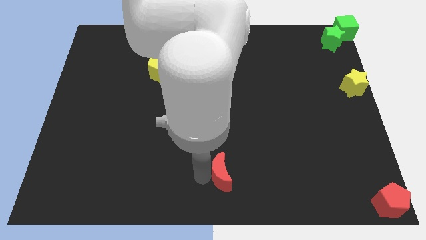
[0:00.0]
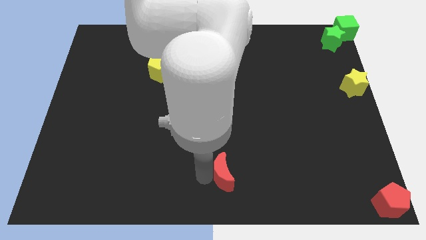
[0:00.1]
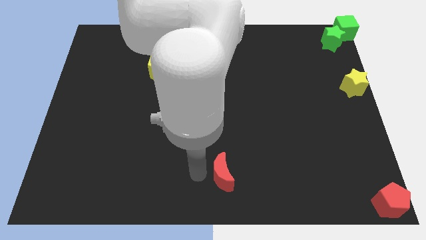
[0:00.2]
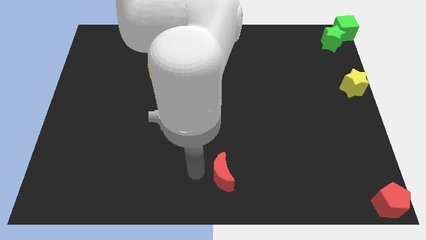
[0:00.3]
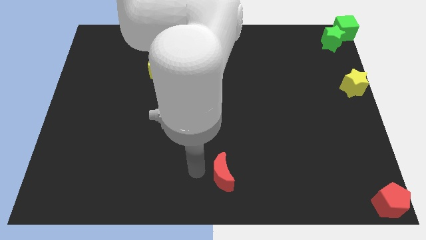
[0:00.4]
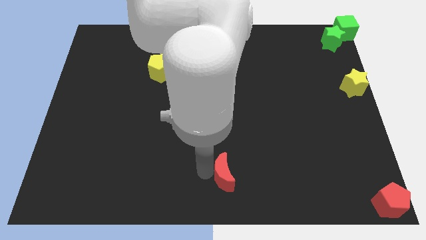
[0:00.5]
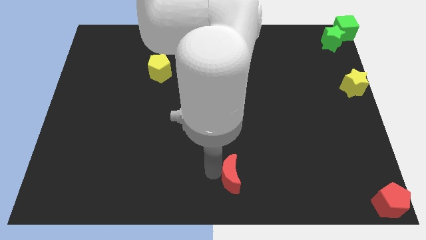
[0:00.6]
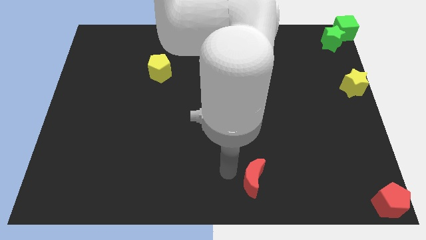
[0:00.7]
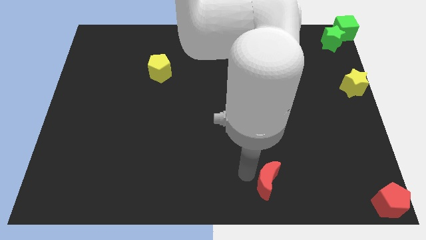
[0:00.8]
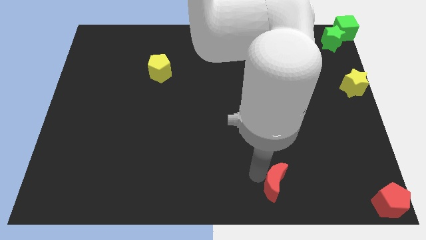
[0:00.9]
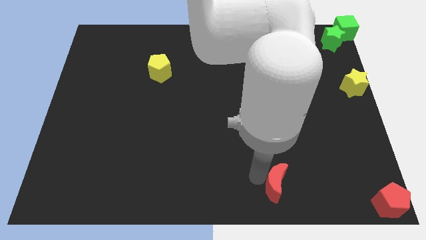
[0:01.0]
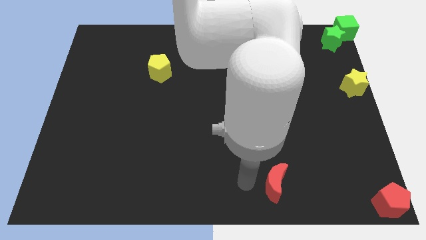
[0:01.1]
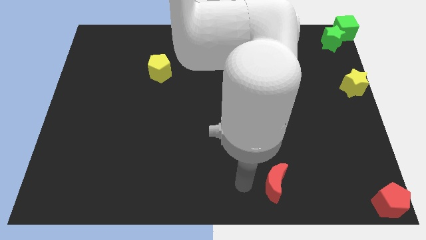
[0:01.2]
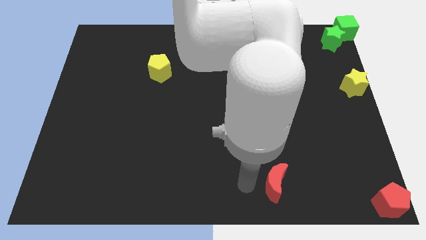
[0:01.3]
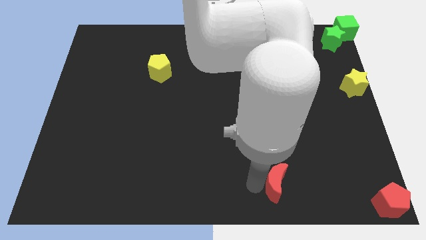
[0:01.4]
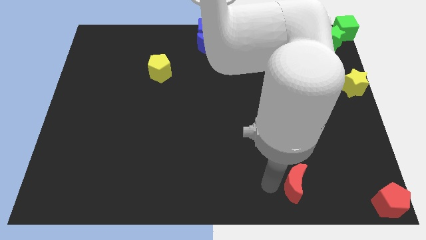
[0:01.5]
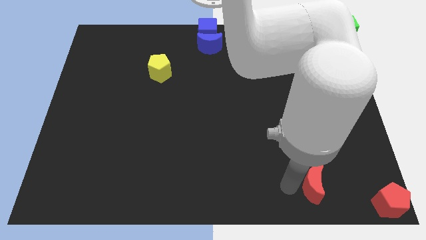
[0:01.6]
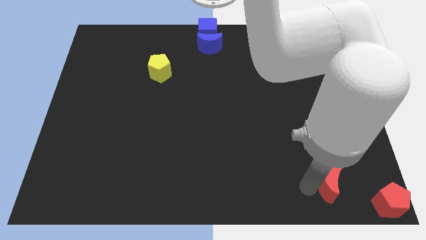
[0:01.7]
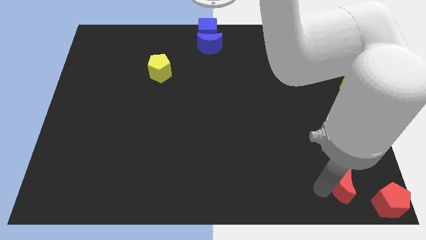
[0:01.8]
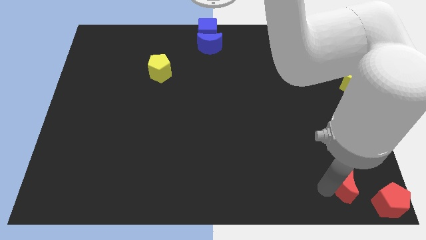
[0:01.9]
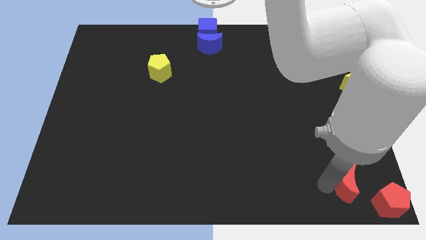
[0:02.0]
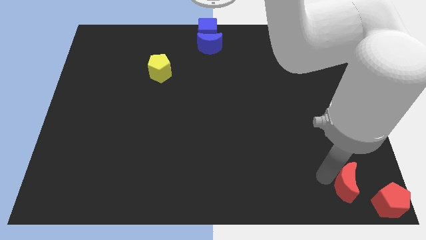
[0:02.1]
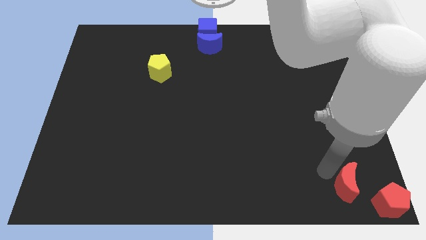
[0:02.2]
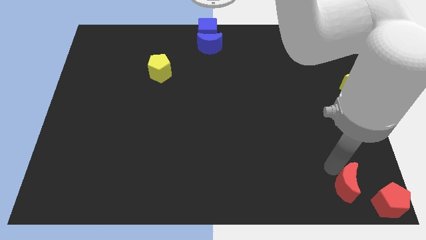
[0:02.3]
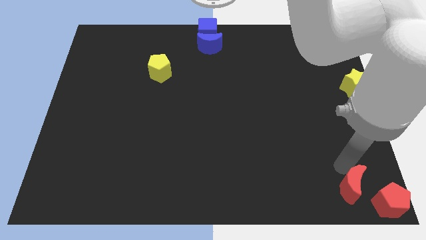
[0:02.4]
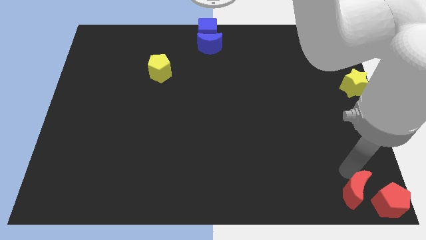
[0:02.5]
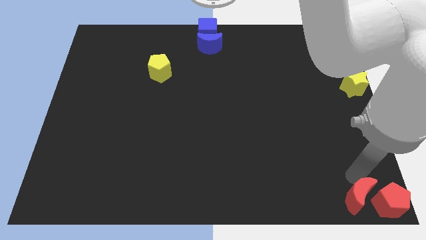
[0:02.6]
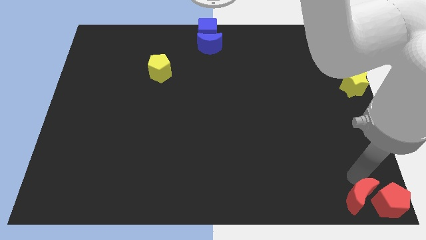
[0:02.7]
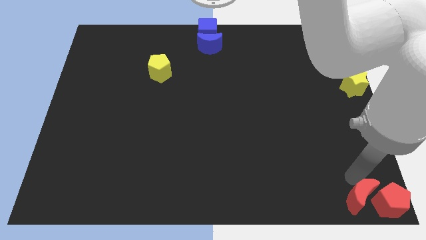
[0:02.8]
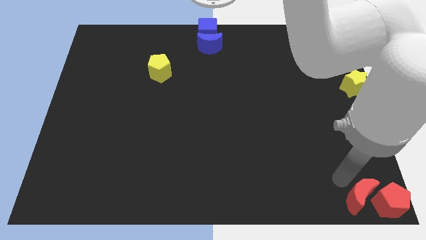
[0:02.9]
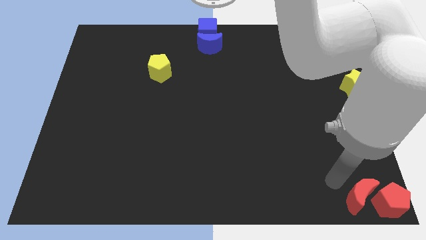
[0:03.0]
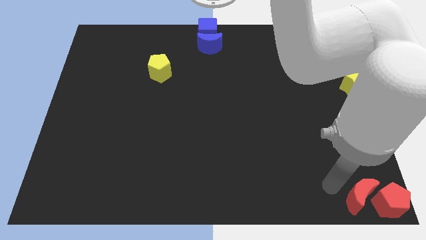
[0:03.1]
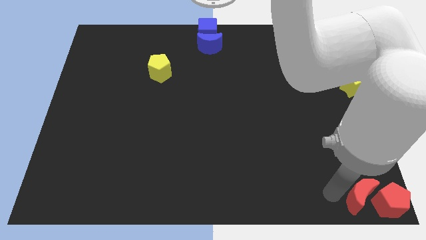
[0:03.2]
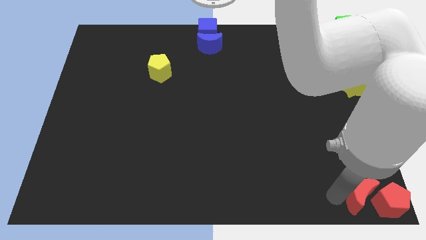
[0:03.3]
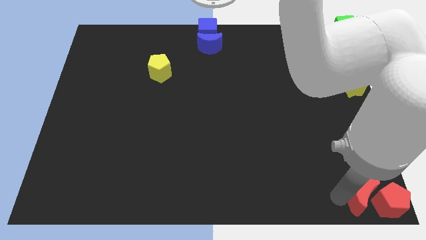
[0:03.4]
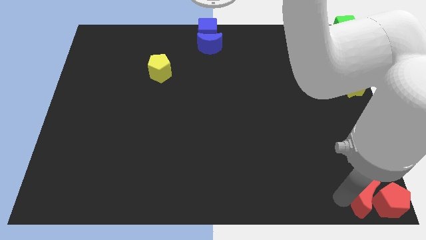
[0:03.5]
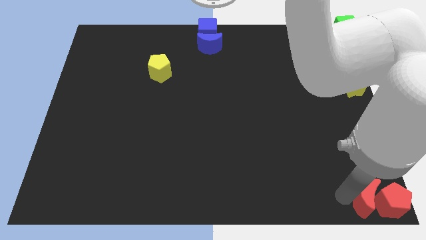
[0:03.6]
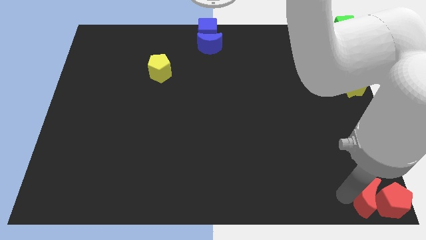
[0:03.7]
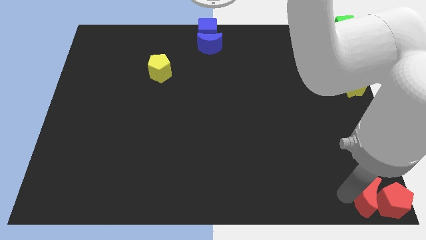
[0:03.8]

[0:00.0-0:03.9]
put the red crescent left to the right pentagon

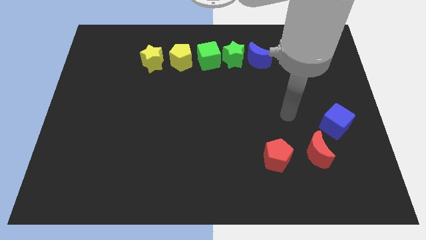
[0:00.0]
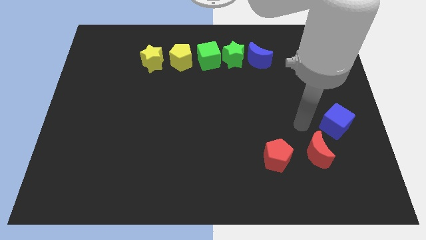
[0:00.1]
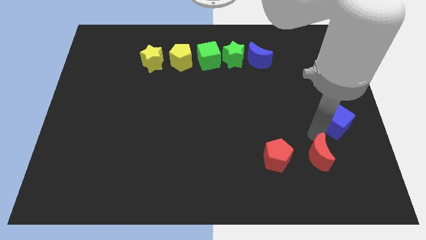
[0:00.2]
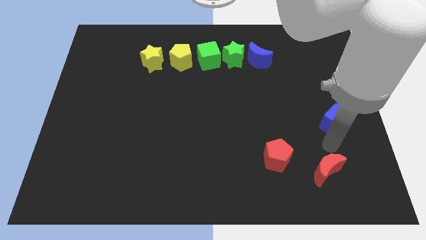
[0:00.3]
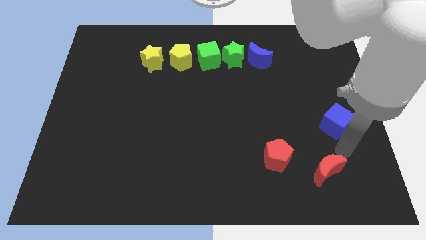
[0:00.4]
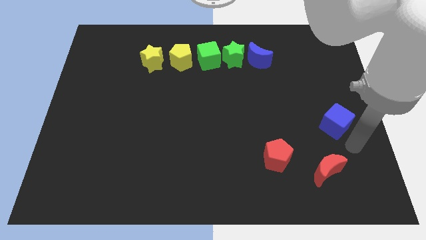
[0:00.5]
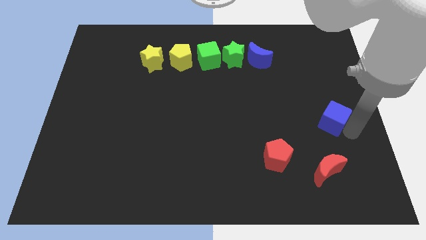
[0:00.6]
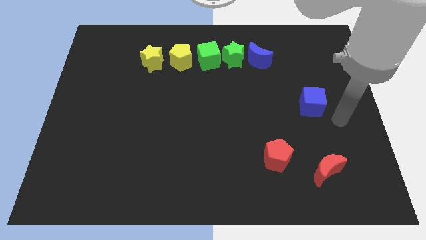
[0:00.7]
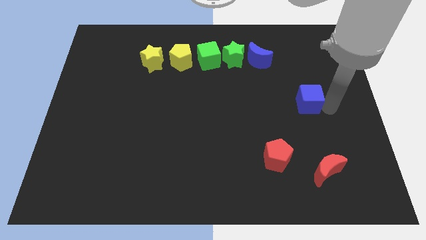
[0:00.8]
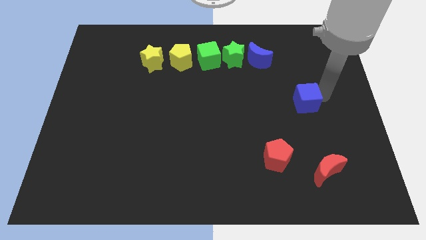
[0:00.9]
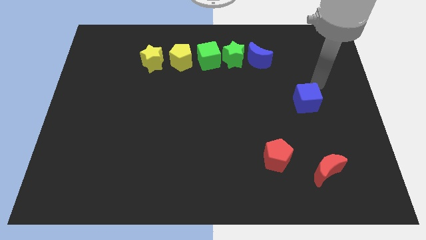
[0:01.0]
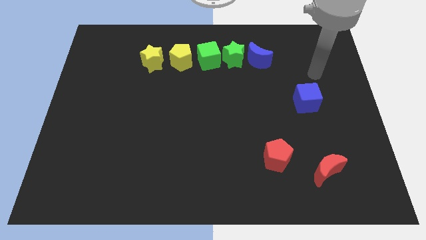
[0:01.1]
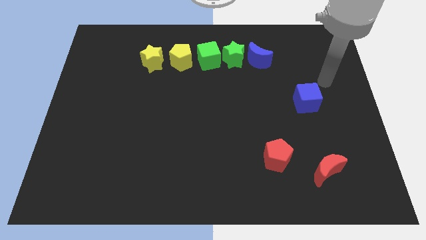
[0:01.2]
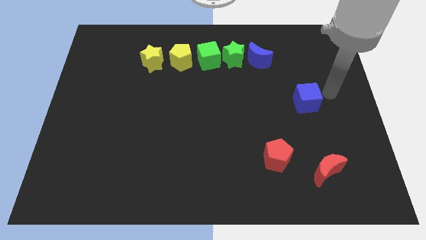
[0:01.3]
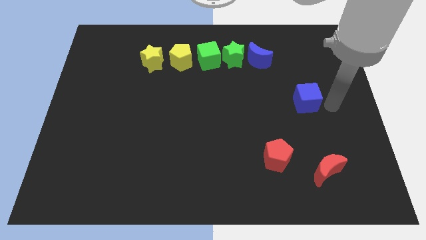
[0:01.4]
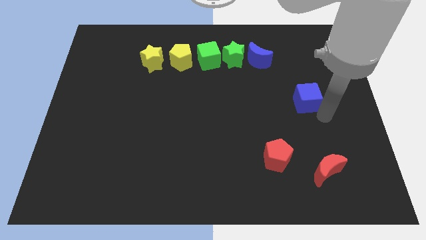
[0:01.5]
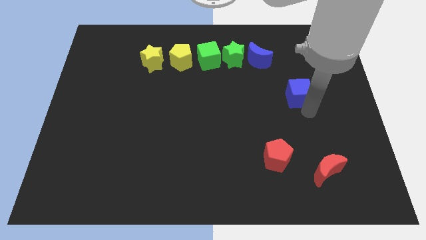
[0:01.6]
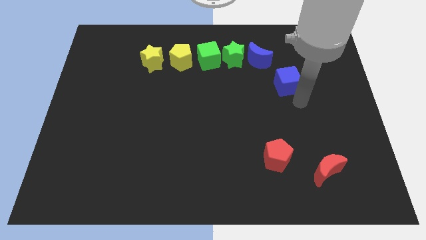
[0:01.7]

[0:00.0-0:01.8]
push the blue cube towards the blue crescent

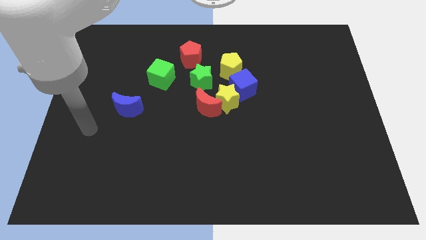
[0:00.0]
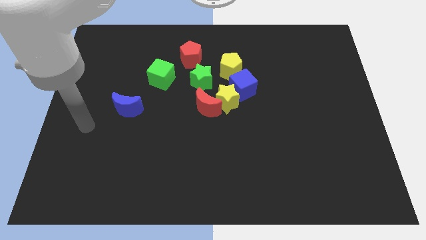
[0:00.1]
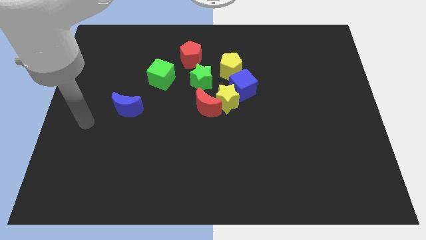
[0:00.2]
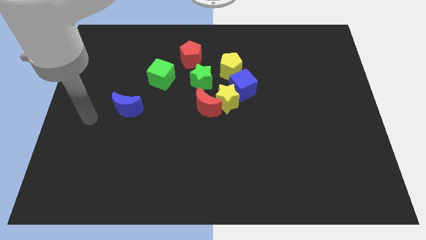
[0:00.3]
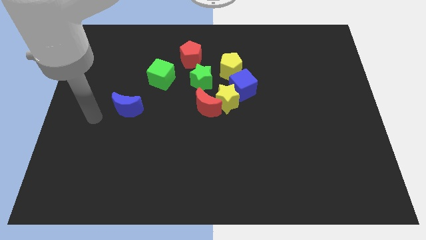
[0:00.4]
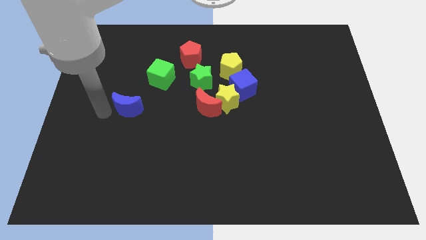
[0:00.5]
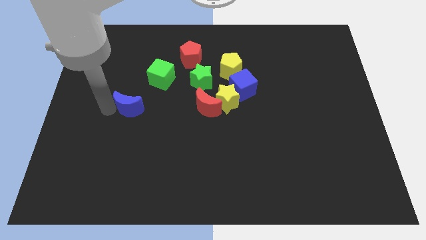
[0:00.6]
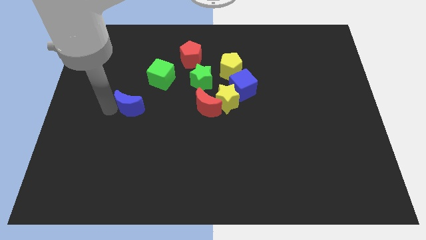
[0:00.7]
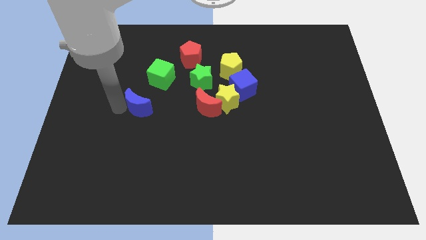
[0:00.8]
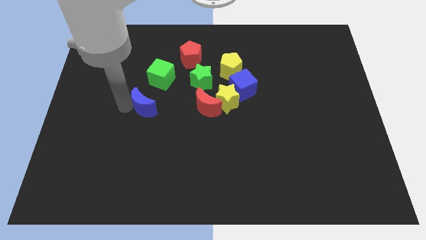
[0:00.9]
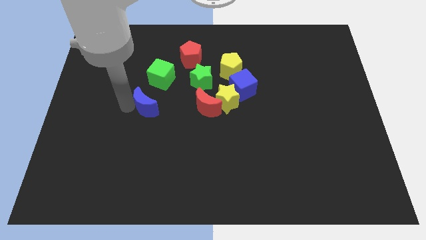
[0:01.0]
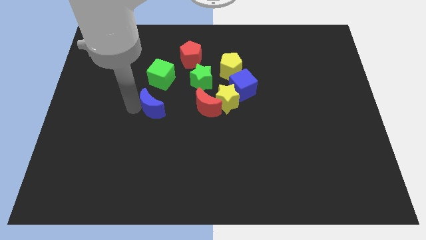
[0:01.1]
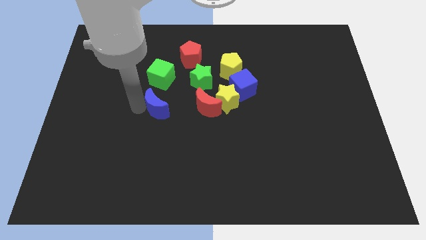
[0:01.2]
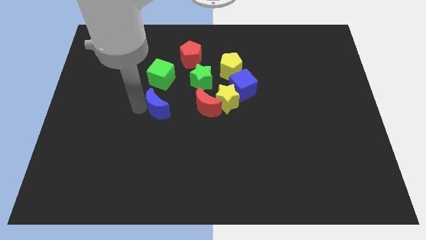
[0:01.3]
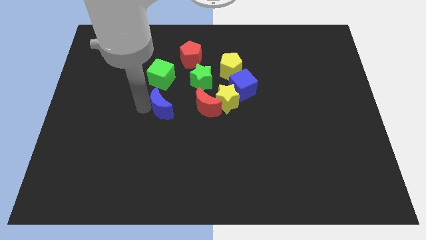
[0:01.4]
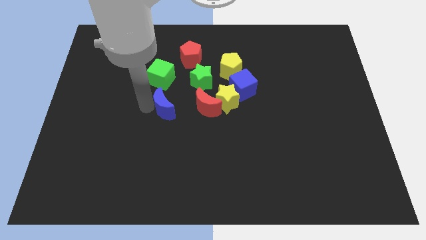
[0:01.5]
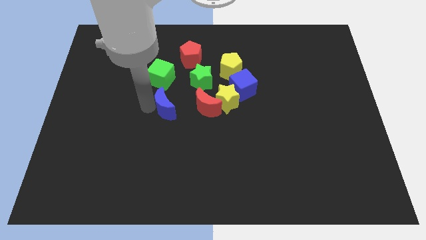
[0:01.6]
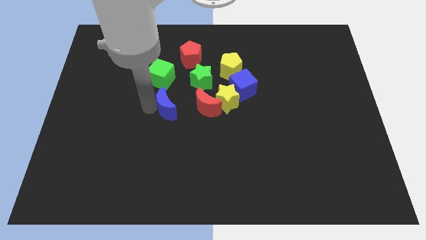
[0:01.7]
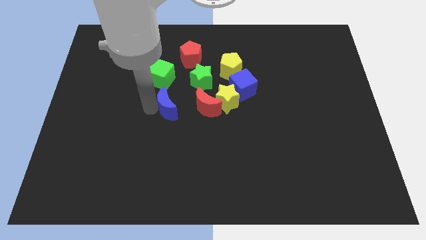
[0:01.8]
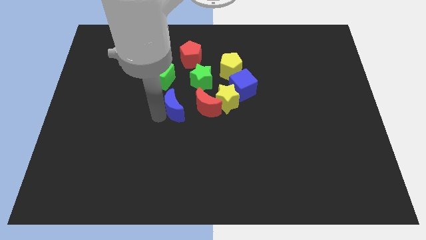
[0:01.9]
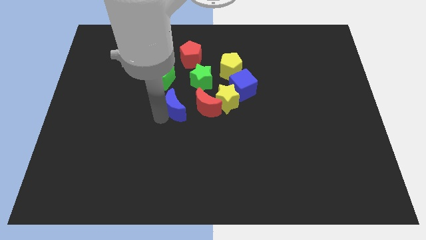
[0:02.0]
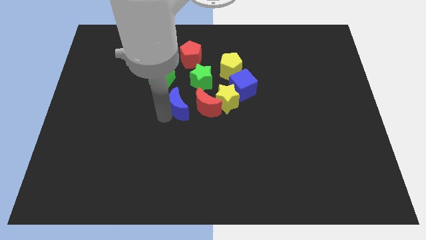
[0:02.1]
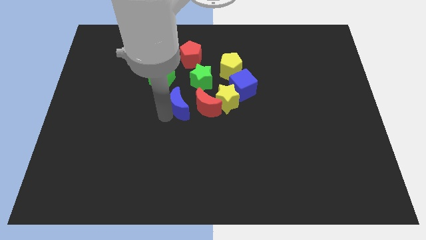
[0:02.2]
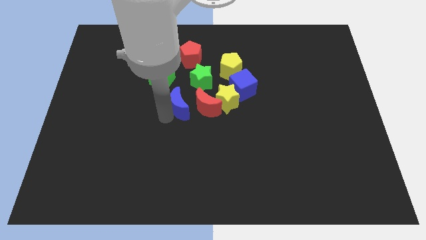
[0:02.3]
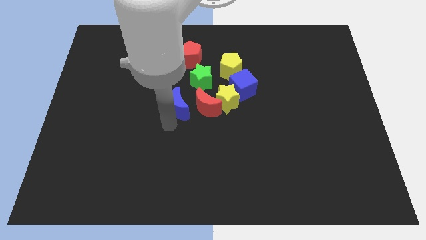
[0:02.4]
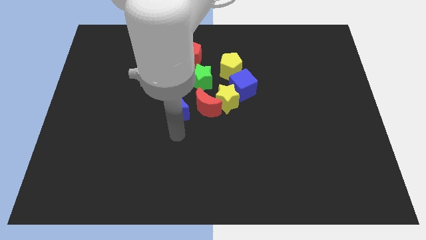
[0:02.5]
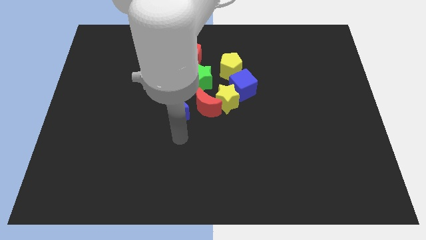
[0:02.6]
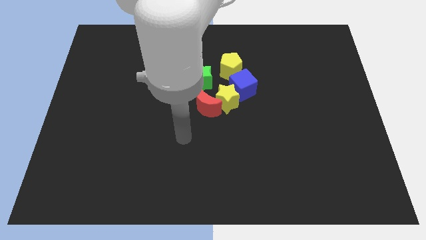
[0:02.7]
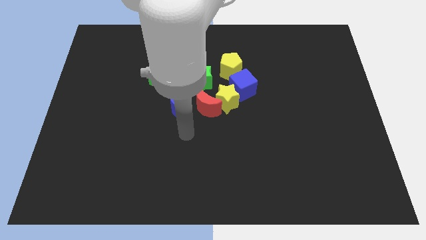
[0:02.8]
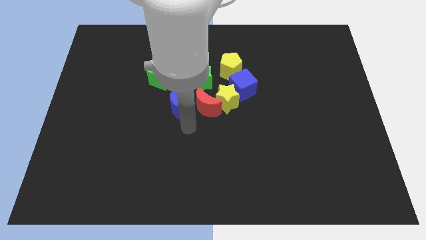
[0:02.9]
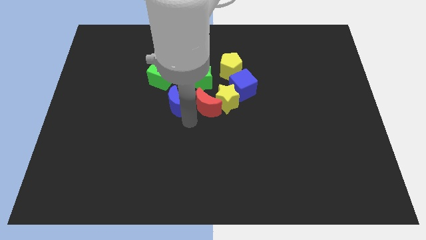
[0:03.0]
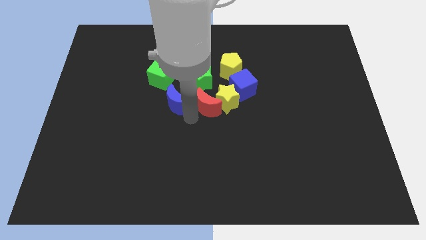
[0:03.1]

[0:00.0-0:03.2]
push blue crescent slightly towards right

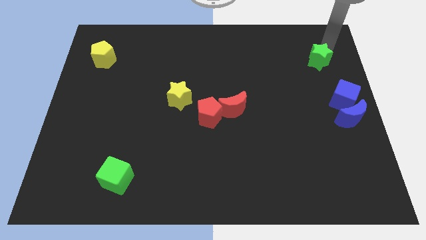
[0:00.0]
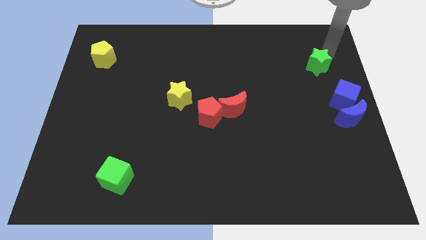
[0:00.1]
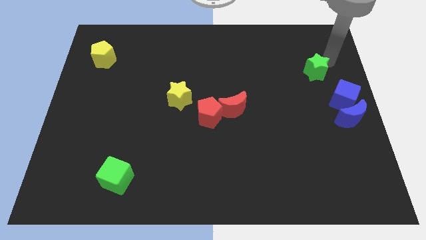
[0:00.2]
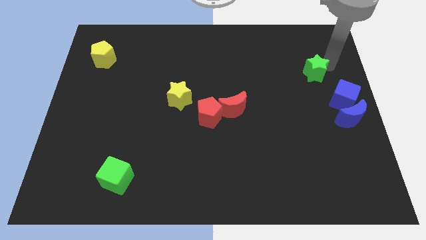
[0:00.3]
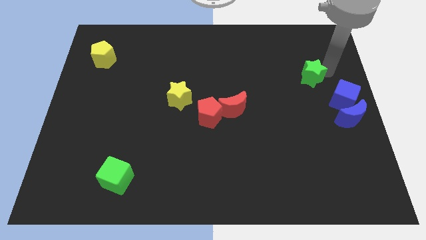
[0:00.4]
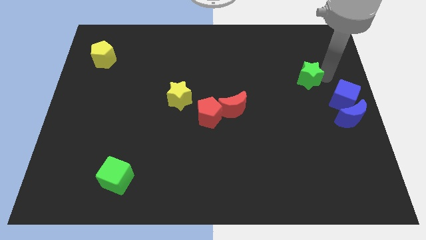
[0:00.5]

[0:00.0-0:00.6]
place the green star diagonally to the blue cube
